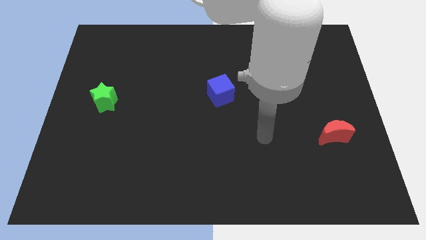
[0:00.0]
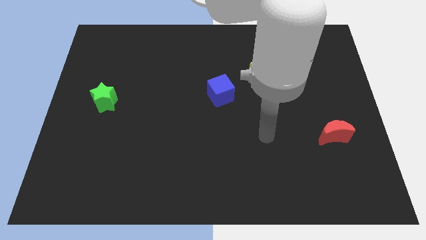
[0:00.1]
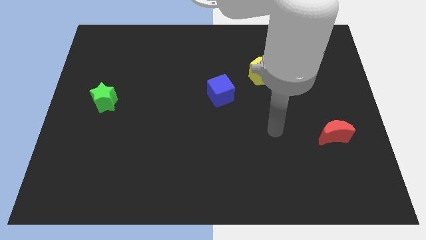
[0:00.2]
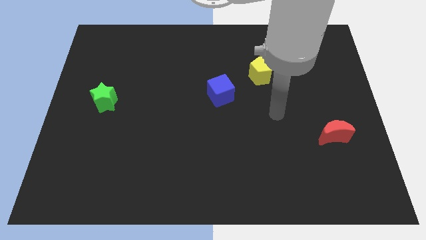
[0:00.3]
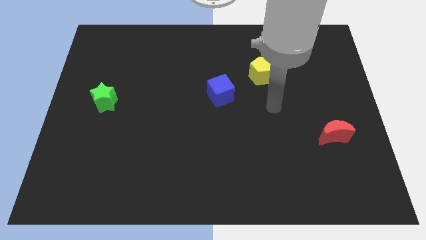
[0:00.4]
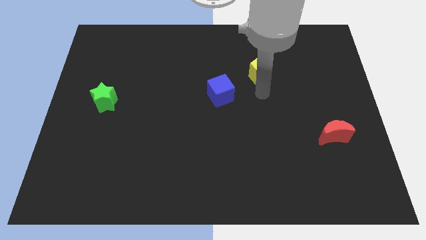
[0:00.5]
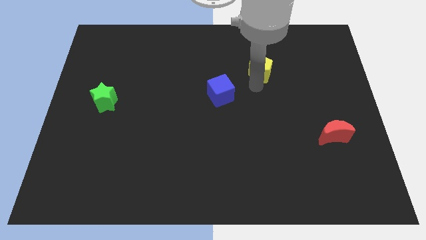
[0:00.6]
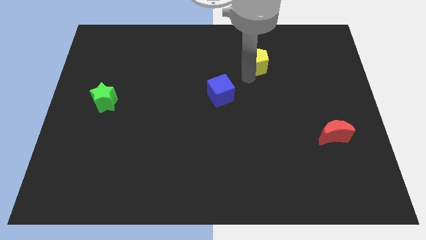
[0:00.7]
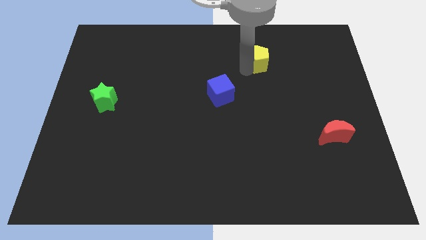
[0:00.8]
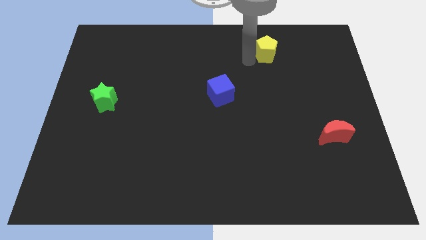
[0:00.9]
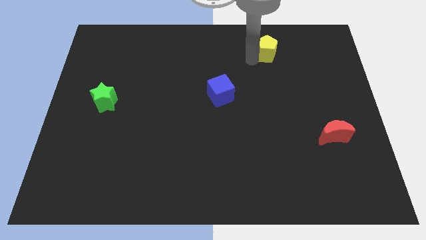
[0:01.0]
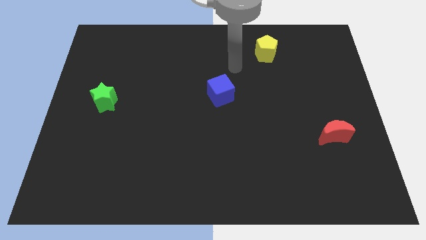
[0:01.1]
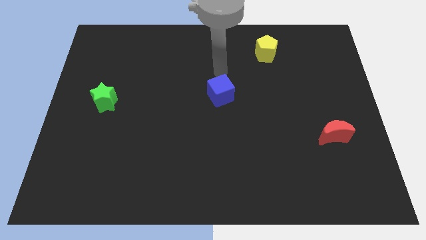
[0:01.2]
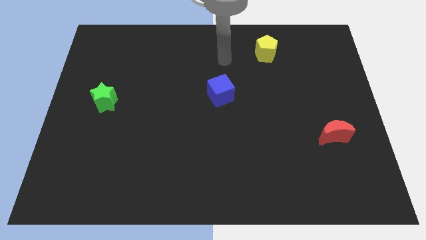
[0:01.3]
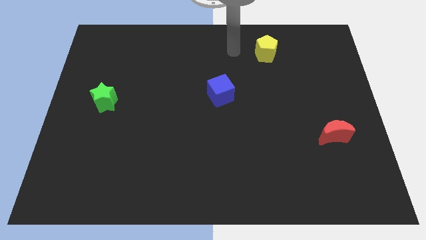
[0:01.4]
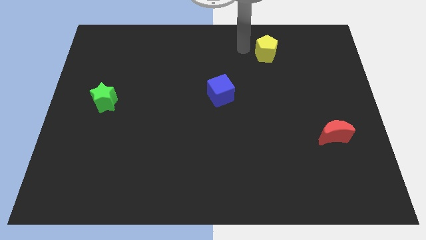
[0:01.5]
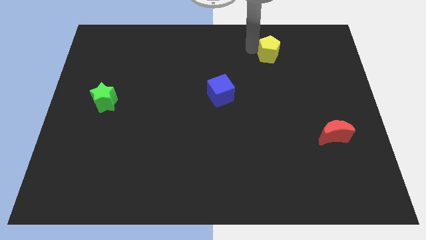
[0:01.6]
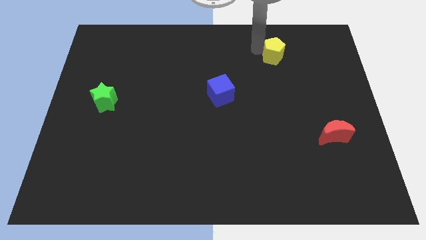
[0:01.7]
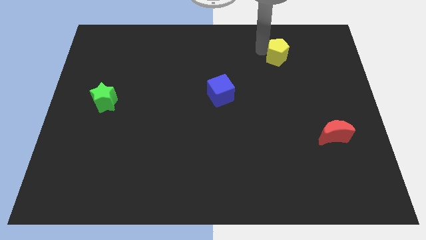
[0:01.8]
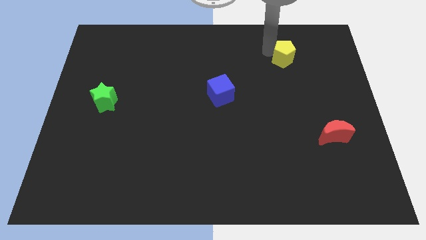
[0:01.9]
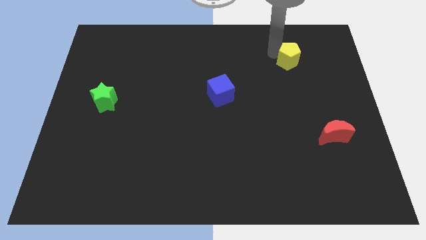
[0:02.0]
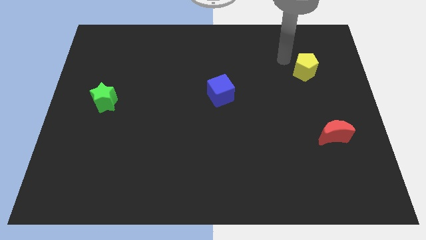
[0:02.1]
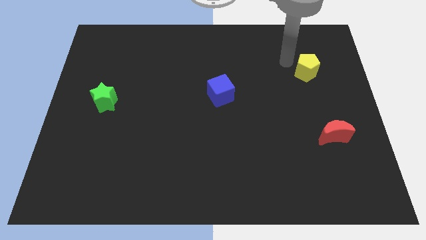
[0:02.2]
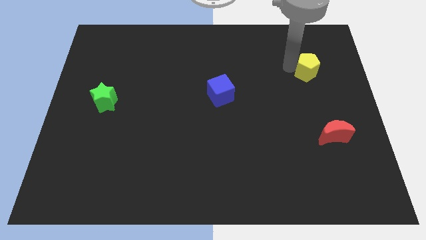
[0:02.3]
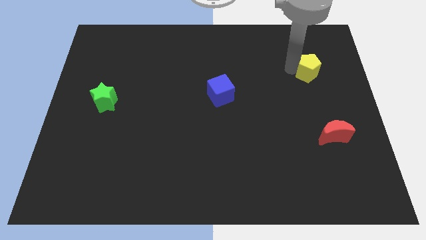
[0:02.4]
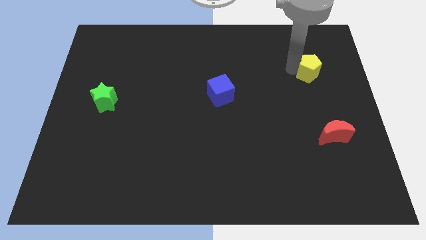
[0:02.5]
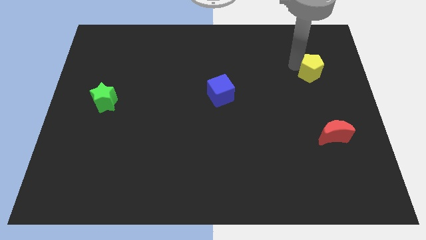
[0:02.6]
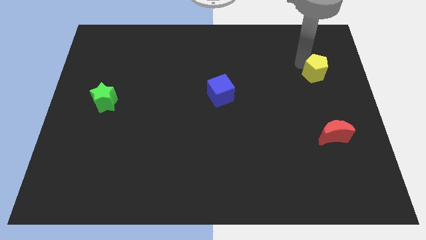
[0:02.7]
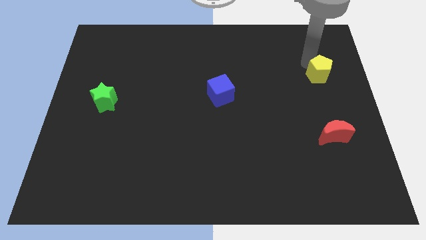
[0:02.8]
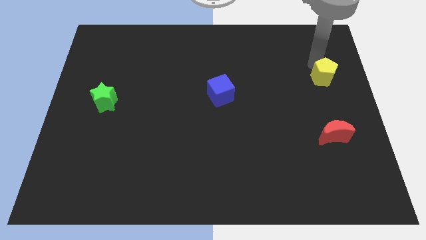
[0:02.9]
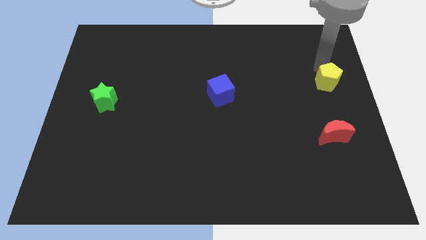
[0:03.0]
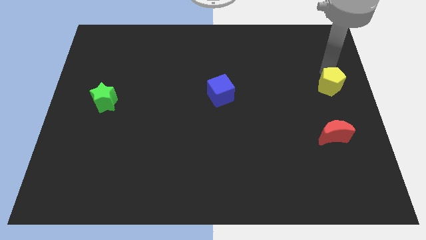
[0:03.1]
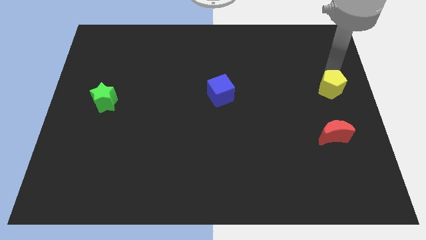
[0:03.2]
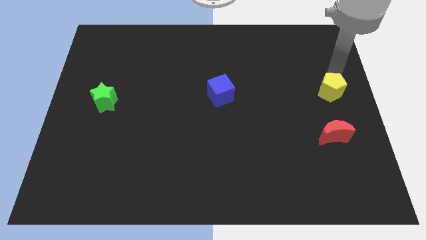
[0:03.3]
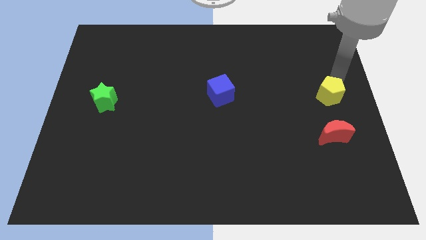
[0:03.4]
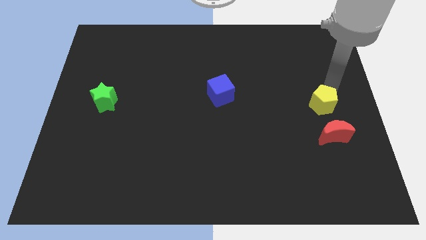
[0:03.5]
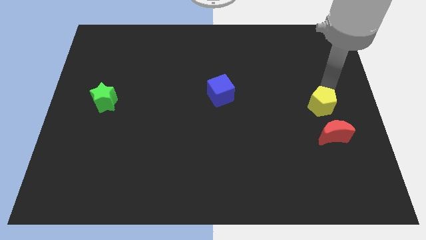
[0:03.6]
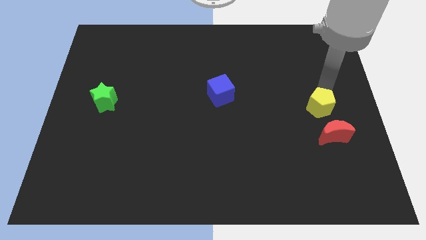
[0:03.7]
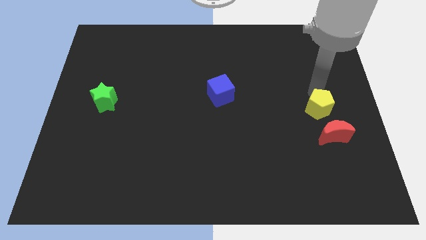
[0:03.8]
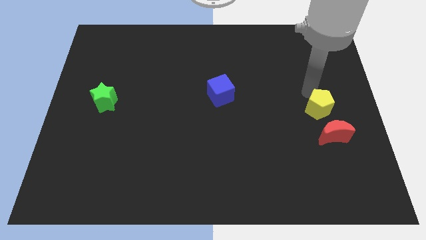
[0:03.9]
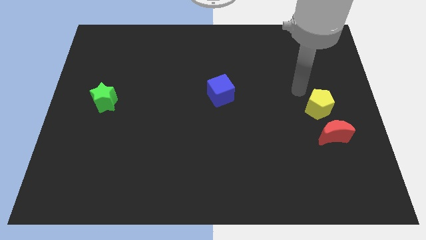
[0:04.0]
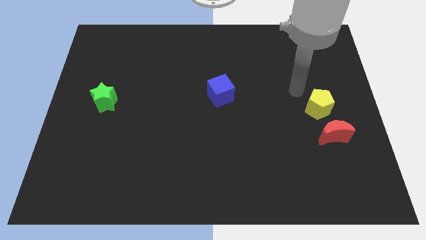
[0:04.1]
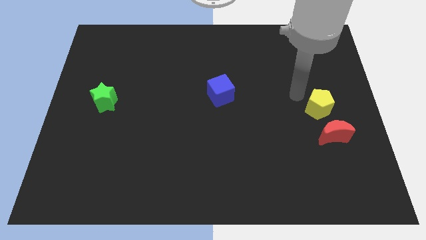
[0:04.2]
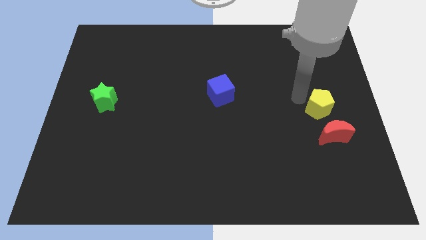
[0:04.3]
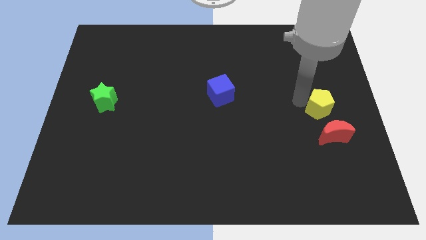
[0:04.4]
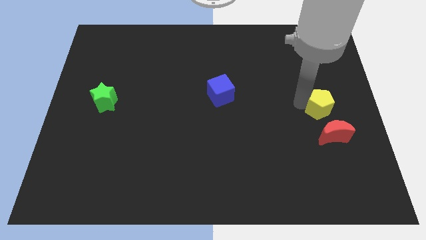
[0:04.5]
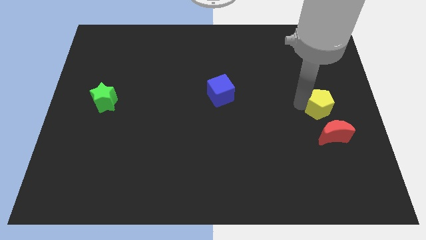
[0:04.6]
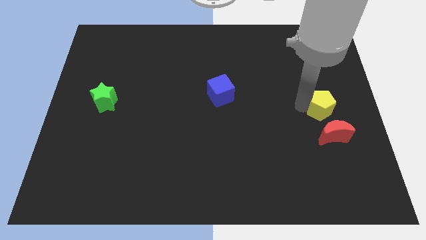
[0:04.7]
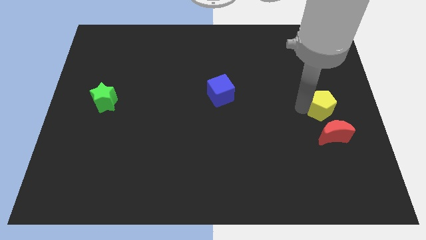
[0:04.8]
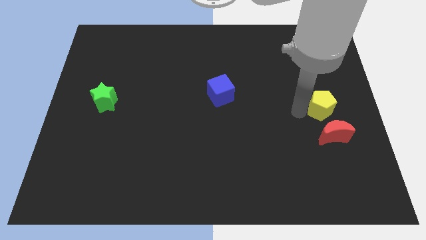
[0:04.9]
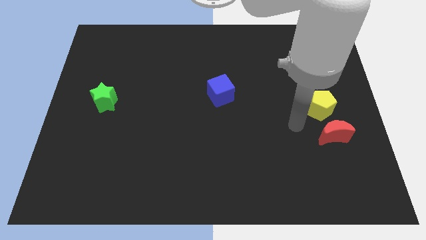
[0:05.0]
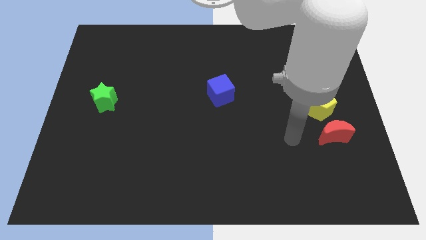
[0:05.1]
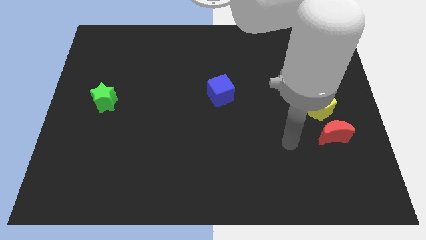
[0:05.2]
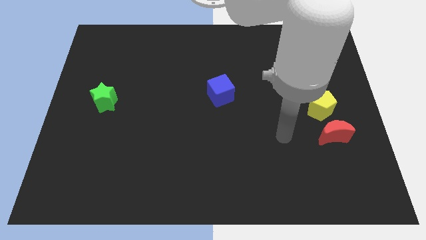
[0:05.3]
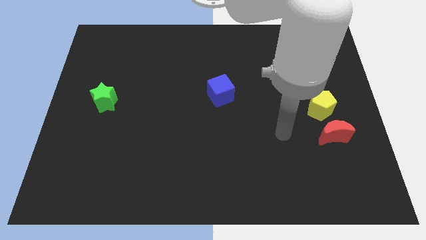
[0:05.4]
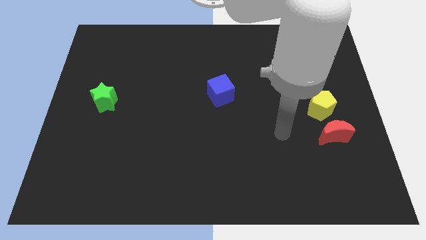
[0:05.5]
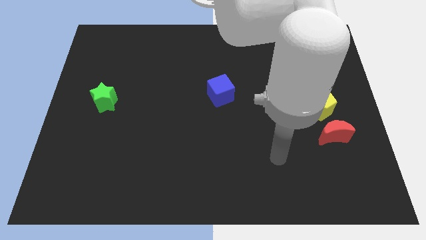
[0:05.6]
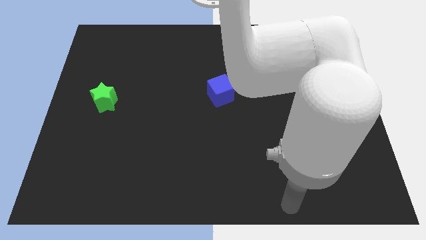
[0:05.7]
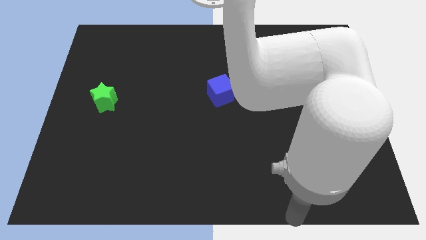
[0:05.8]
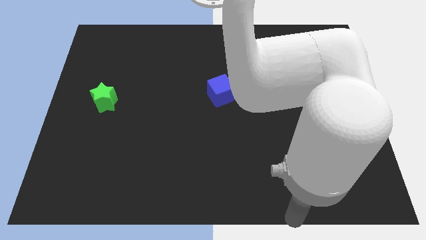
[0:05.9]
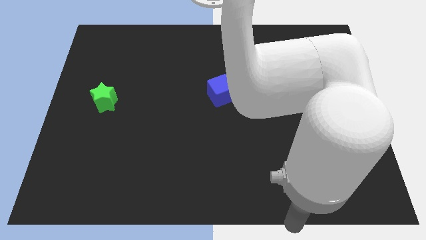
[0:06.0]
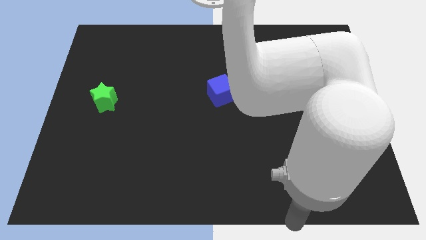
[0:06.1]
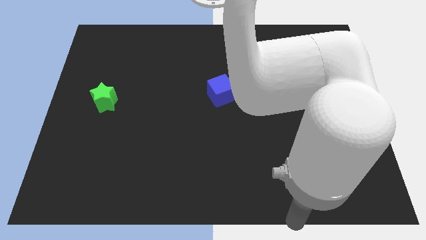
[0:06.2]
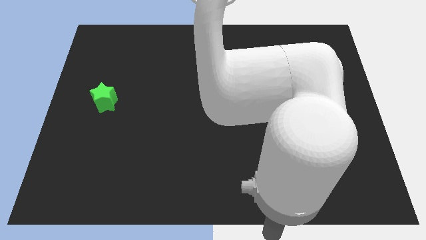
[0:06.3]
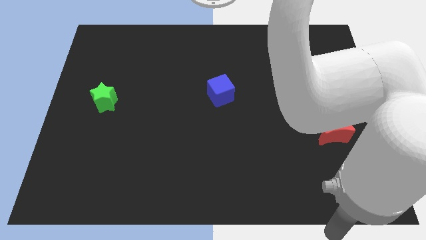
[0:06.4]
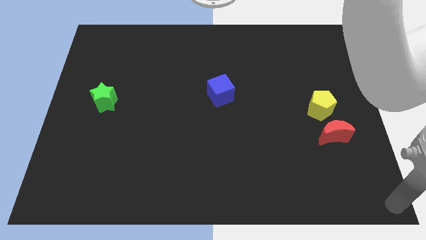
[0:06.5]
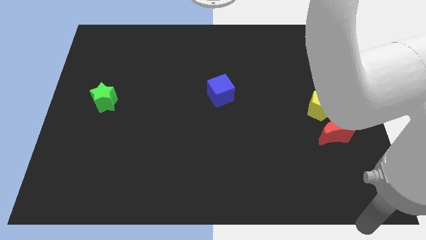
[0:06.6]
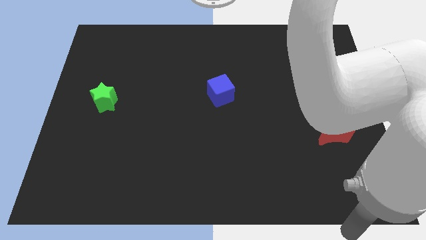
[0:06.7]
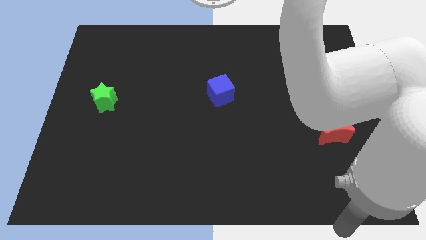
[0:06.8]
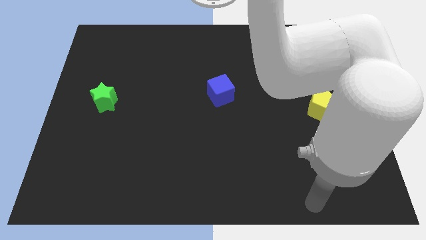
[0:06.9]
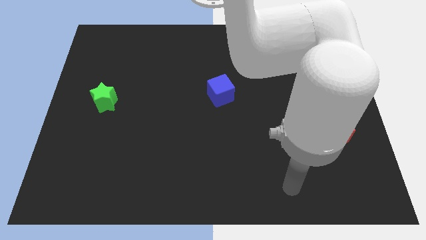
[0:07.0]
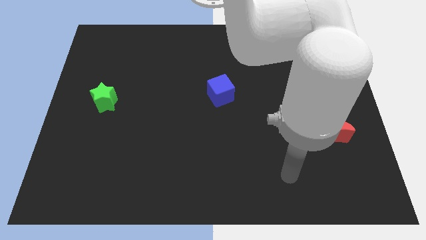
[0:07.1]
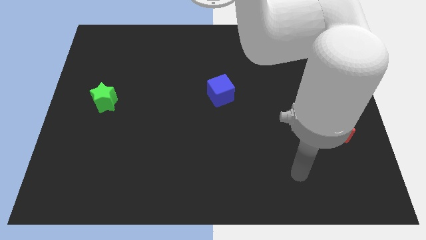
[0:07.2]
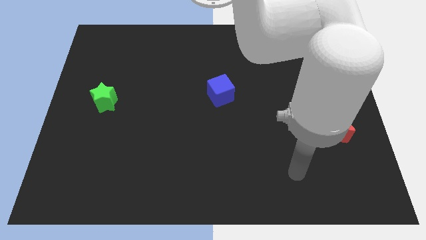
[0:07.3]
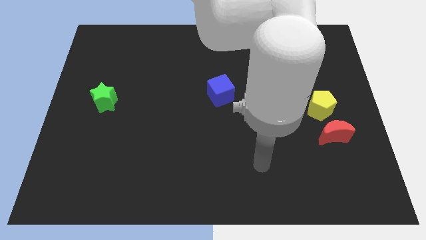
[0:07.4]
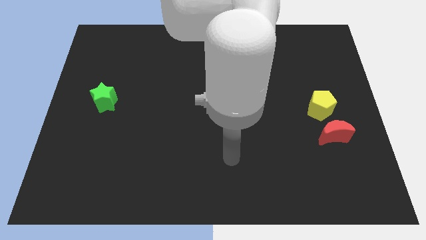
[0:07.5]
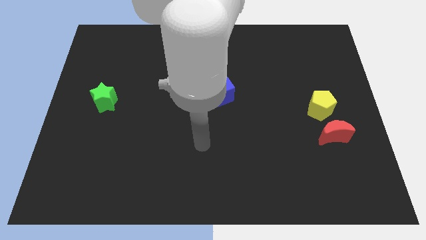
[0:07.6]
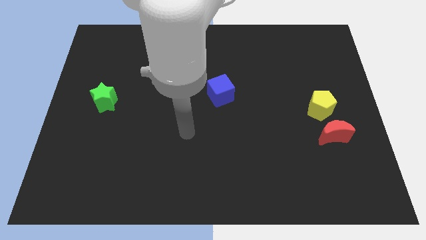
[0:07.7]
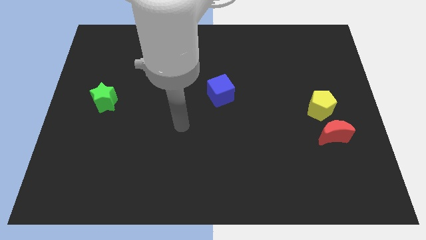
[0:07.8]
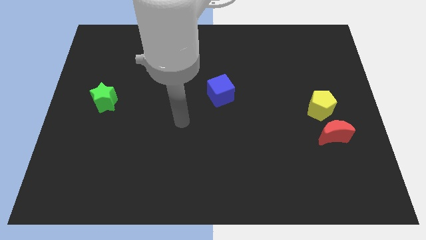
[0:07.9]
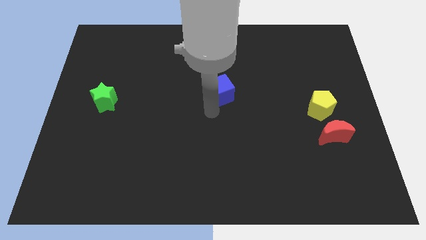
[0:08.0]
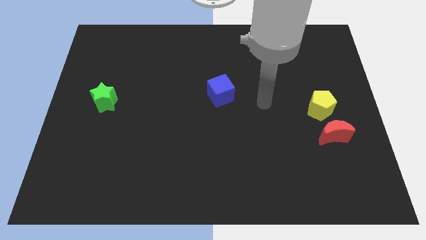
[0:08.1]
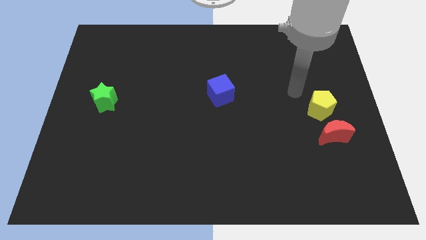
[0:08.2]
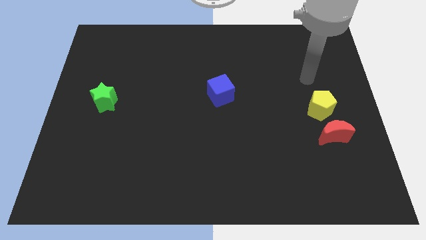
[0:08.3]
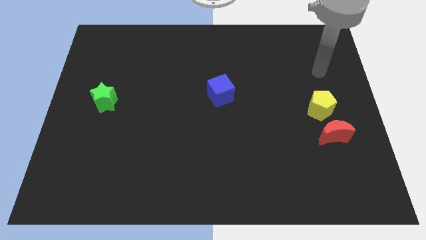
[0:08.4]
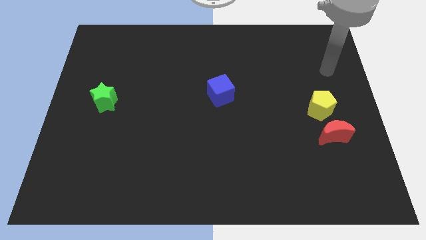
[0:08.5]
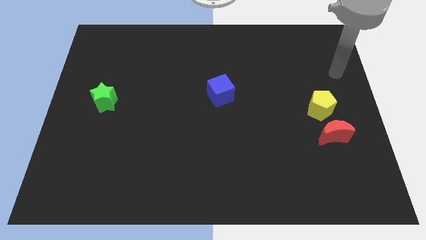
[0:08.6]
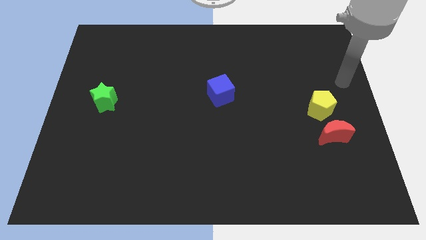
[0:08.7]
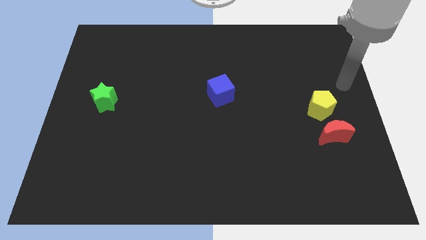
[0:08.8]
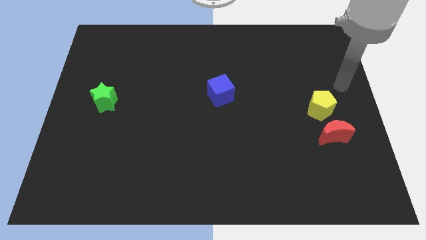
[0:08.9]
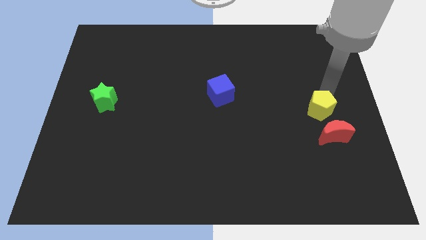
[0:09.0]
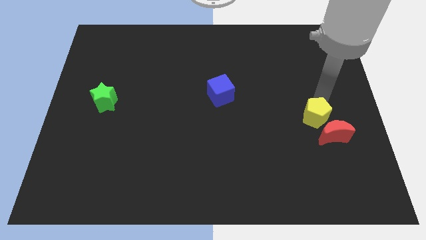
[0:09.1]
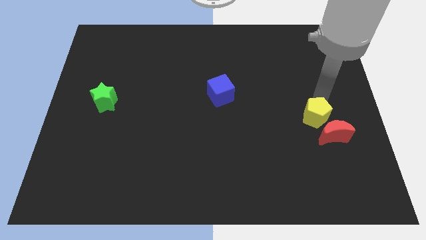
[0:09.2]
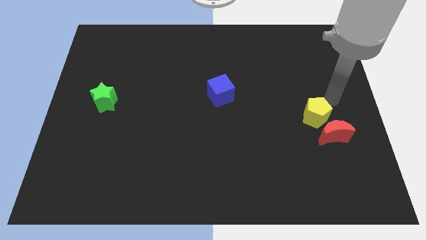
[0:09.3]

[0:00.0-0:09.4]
push the yellow pentagon next to the moon
